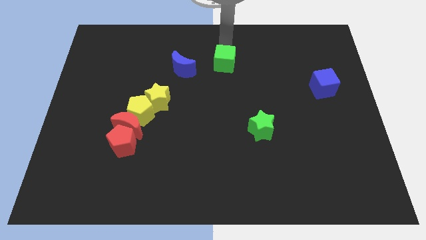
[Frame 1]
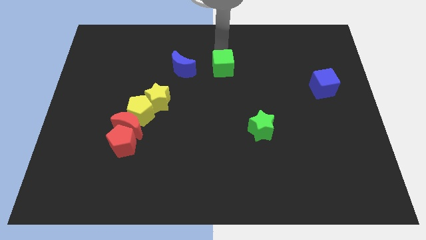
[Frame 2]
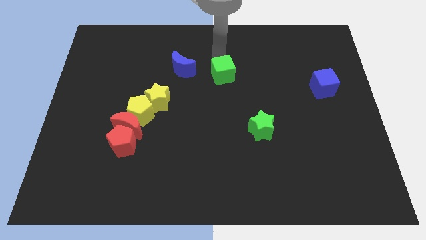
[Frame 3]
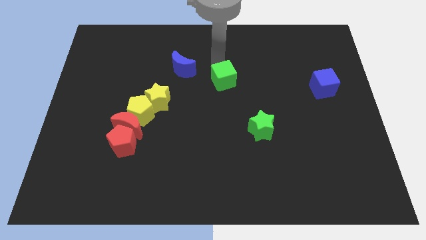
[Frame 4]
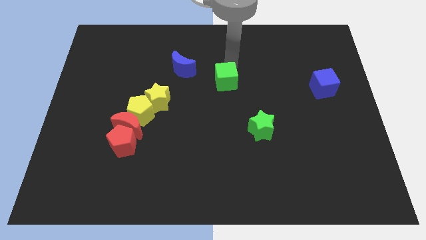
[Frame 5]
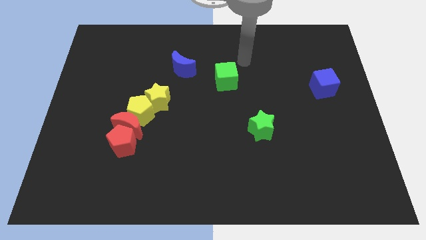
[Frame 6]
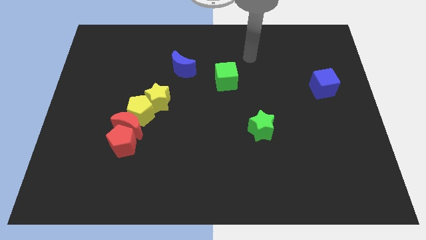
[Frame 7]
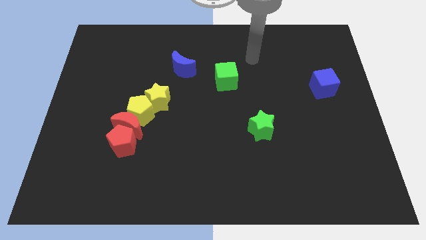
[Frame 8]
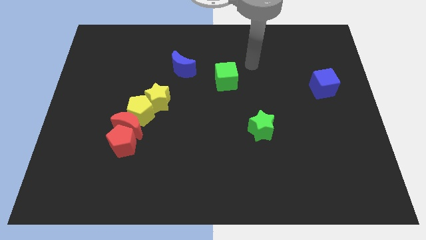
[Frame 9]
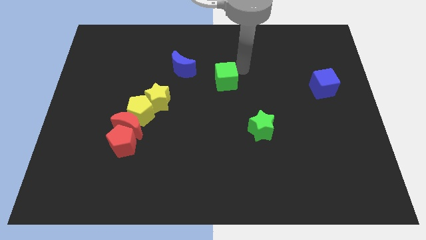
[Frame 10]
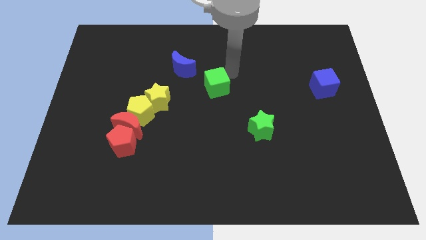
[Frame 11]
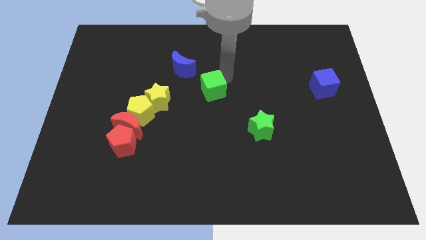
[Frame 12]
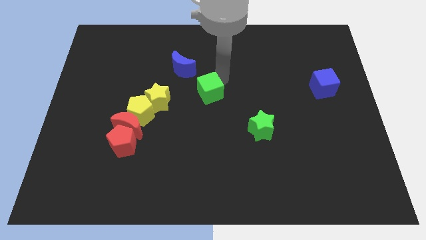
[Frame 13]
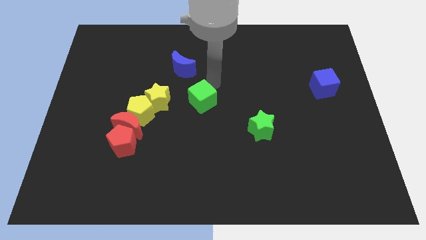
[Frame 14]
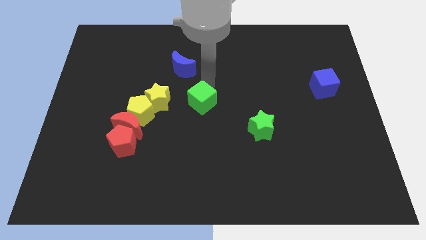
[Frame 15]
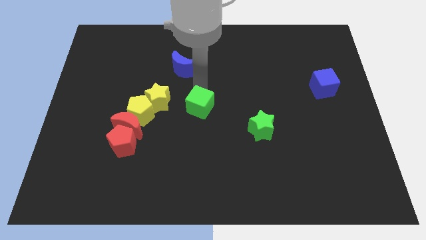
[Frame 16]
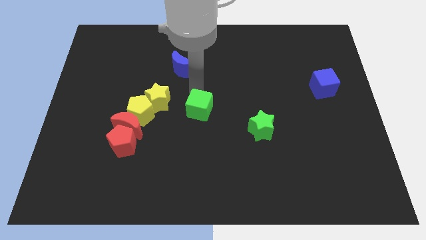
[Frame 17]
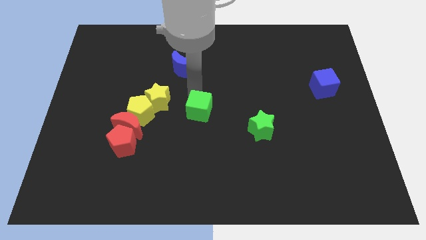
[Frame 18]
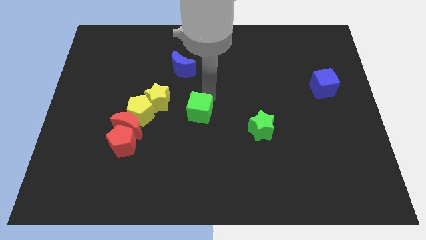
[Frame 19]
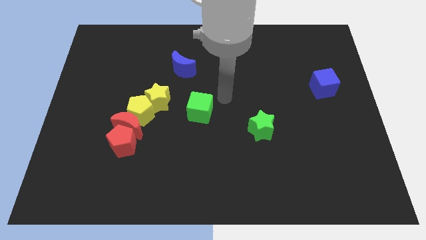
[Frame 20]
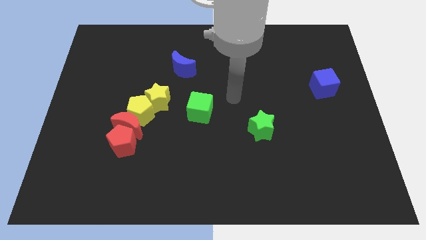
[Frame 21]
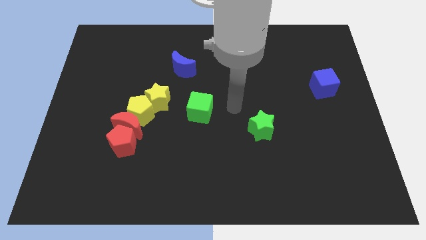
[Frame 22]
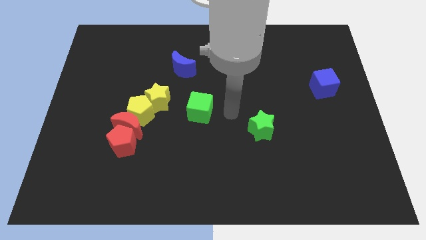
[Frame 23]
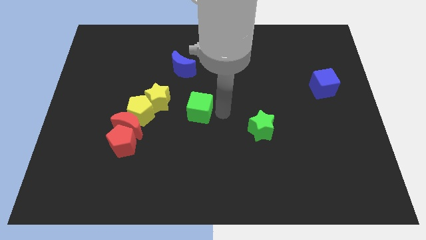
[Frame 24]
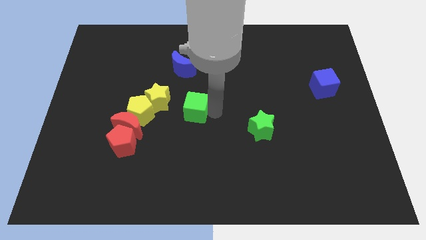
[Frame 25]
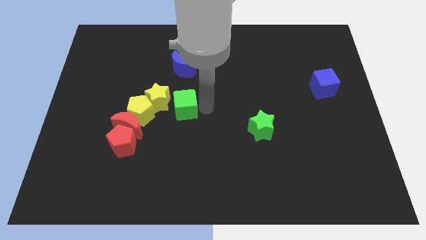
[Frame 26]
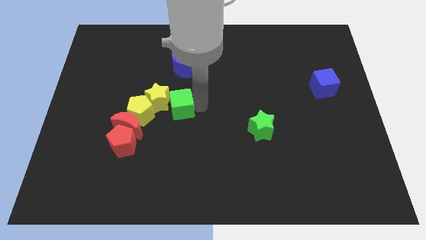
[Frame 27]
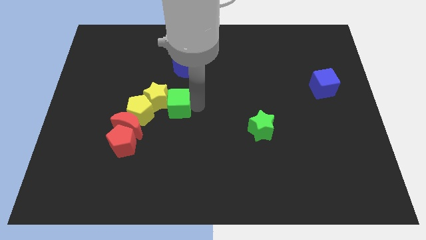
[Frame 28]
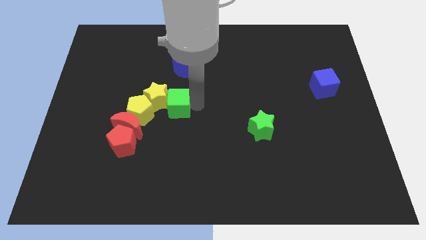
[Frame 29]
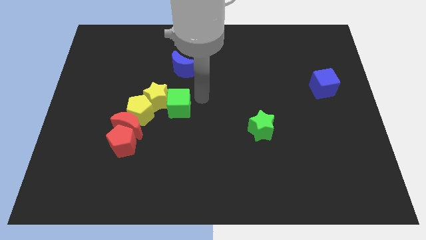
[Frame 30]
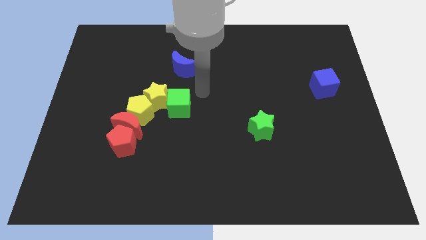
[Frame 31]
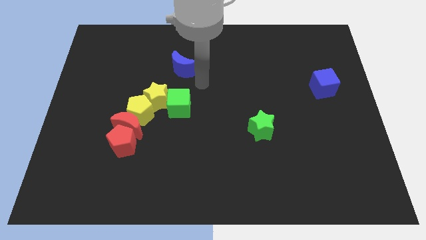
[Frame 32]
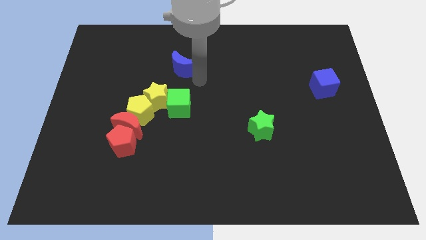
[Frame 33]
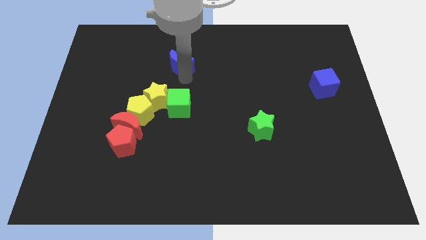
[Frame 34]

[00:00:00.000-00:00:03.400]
put the green cube at the bottom of the blue moon

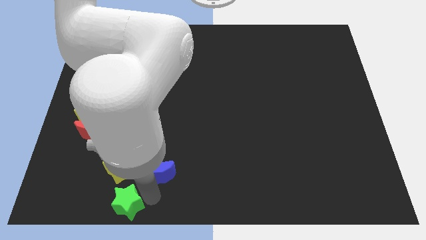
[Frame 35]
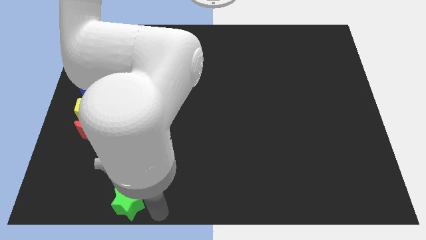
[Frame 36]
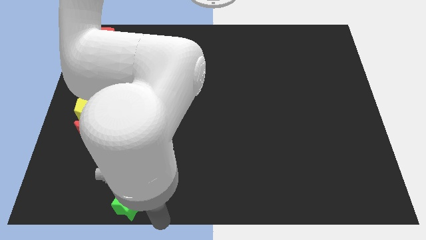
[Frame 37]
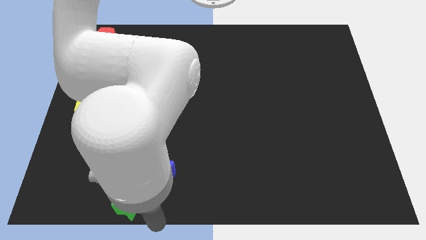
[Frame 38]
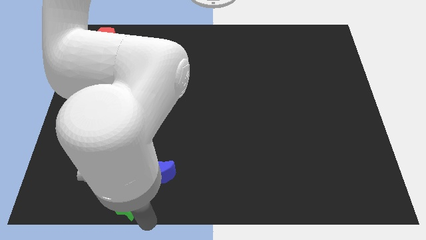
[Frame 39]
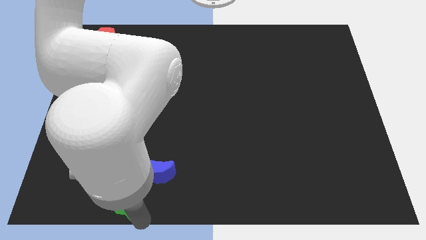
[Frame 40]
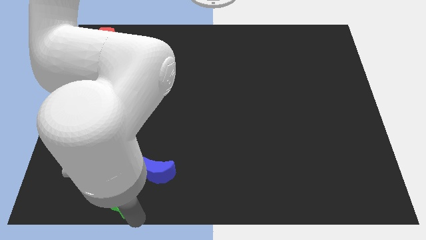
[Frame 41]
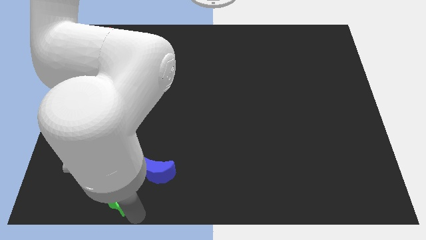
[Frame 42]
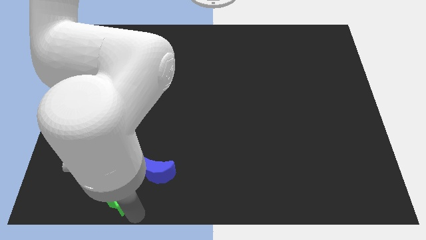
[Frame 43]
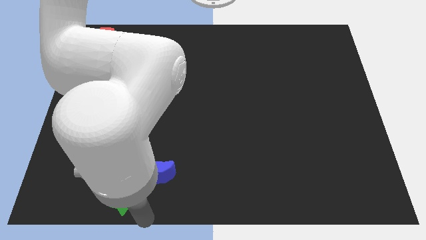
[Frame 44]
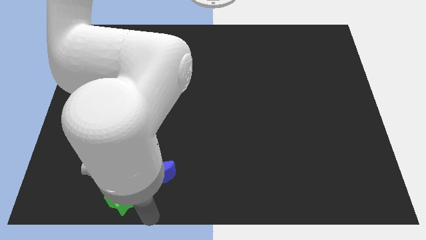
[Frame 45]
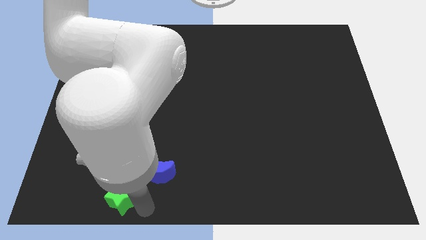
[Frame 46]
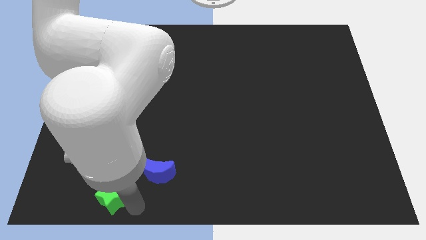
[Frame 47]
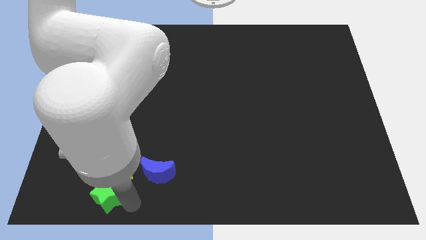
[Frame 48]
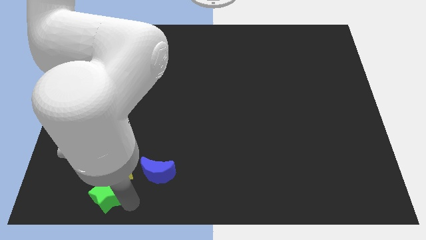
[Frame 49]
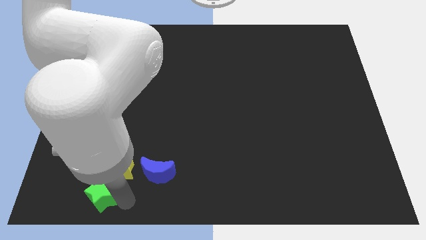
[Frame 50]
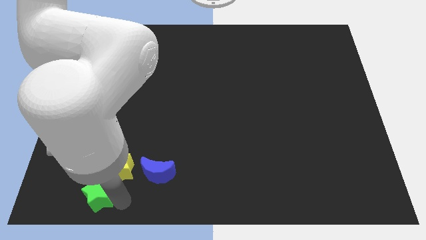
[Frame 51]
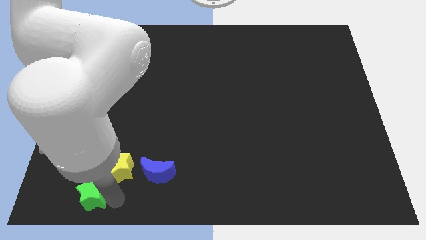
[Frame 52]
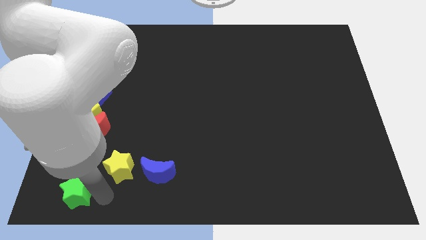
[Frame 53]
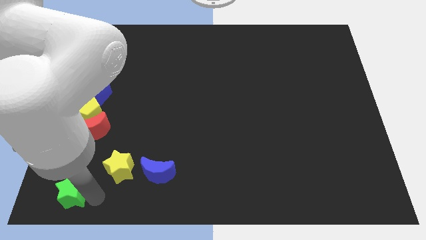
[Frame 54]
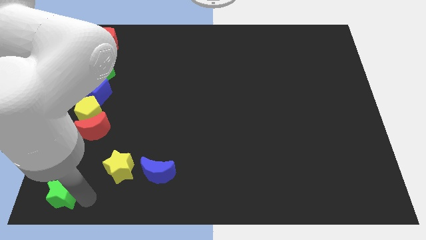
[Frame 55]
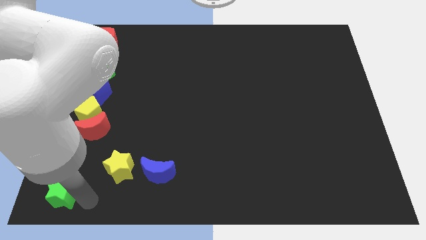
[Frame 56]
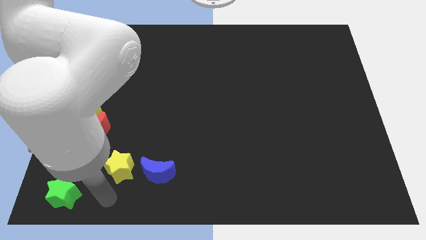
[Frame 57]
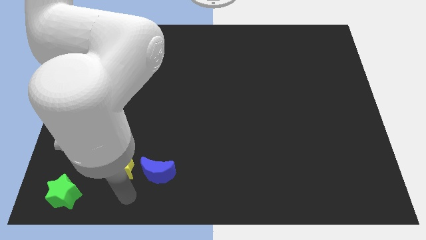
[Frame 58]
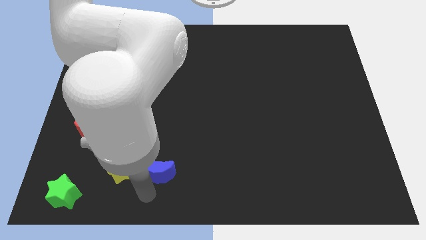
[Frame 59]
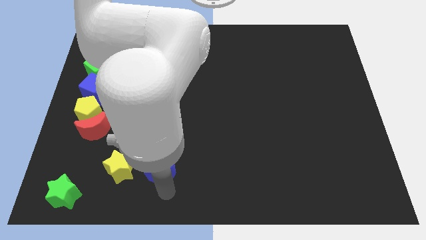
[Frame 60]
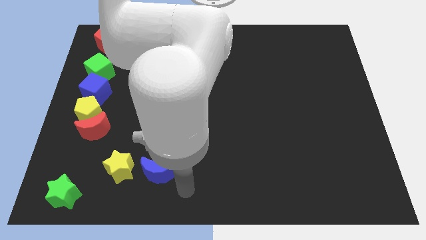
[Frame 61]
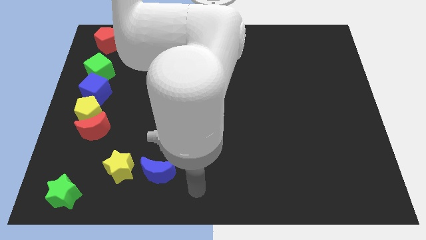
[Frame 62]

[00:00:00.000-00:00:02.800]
push the green star vertically below the red crescent

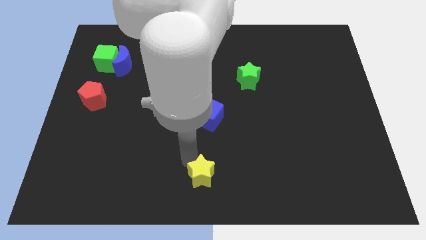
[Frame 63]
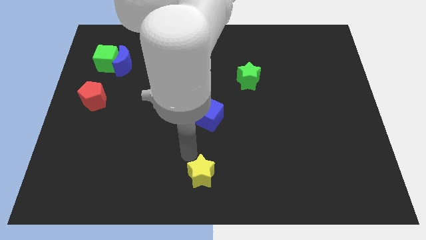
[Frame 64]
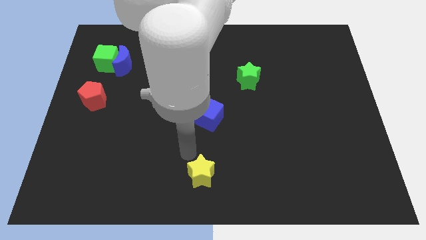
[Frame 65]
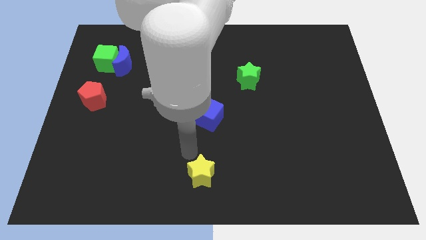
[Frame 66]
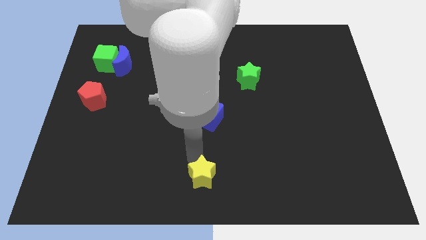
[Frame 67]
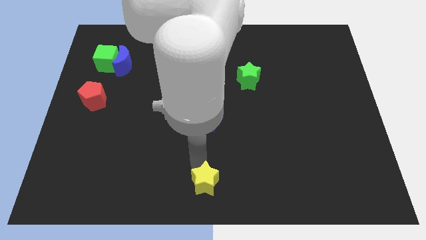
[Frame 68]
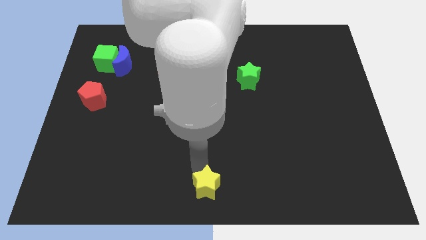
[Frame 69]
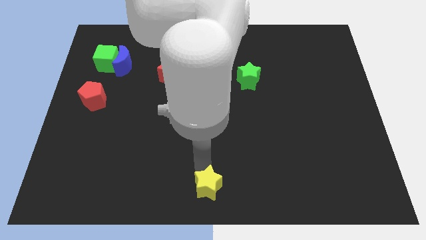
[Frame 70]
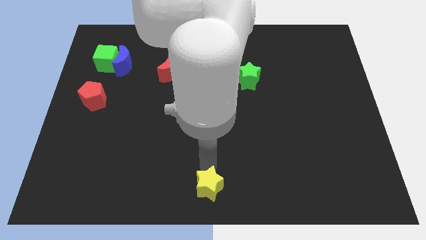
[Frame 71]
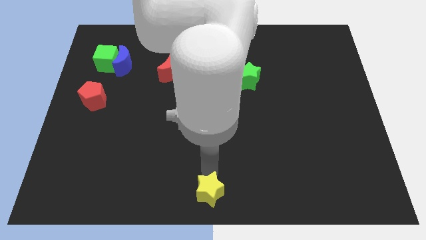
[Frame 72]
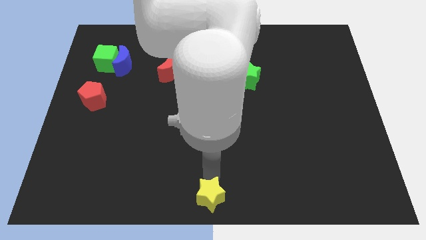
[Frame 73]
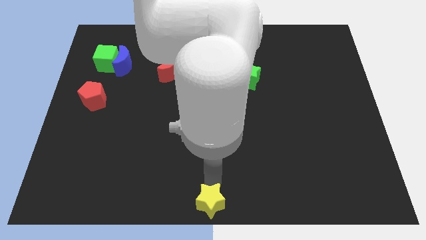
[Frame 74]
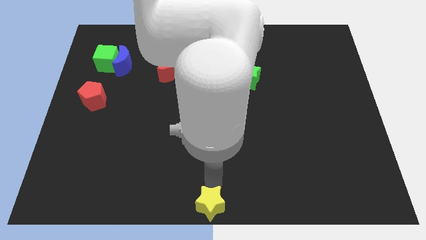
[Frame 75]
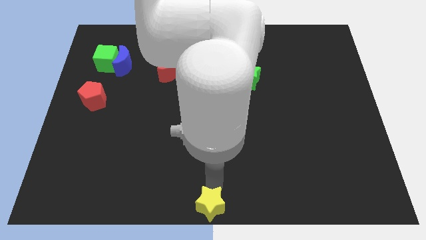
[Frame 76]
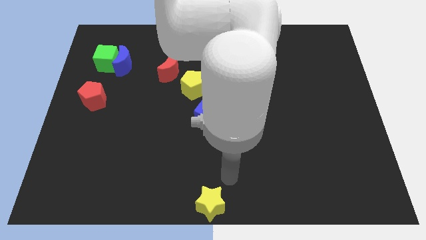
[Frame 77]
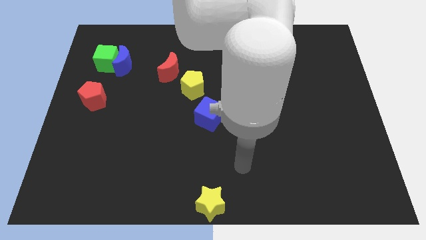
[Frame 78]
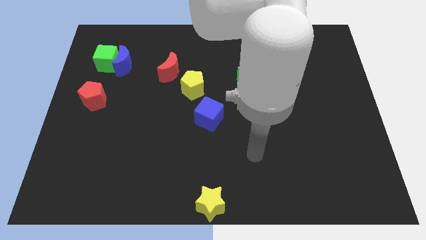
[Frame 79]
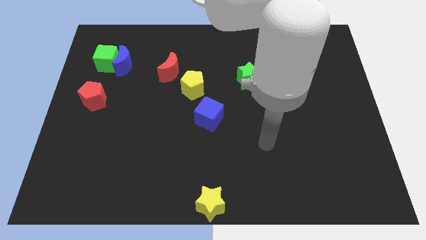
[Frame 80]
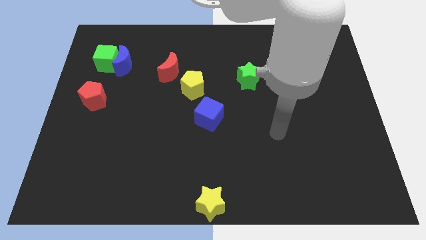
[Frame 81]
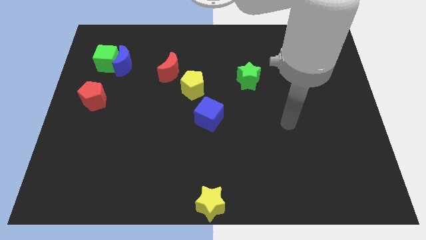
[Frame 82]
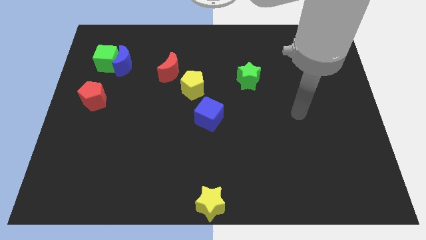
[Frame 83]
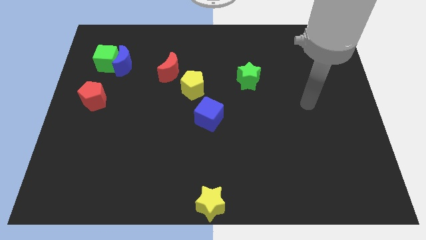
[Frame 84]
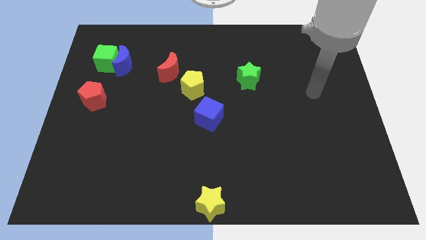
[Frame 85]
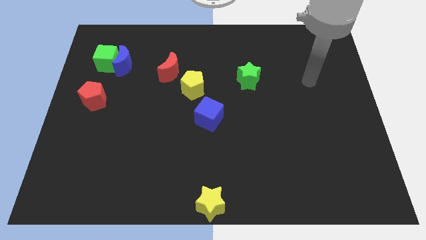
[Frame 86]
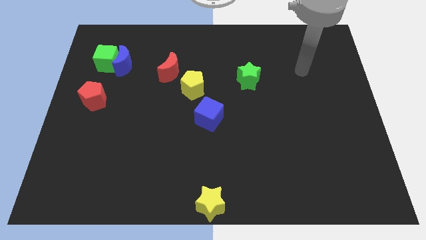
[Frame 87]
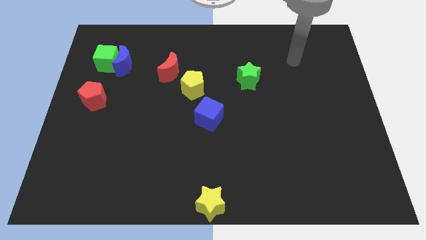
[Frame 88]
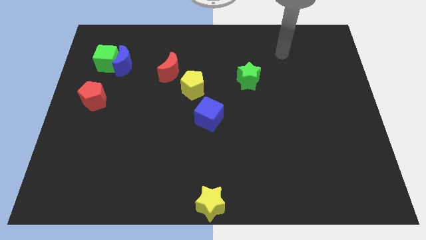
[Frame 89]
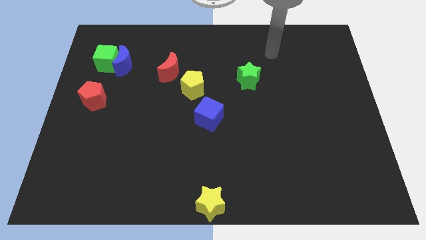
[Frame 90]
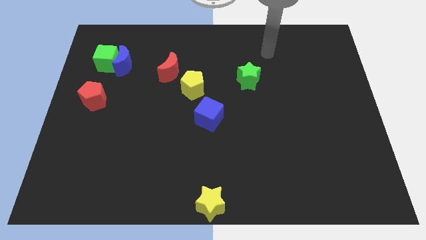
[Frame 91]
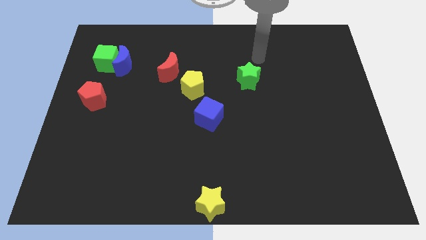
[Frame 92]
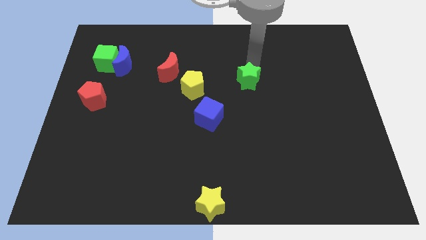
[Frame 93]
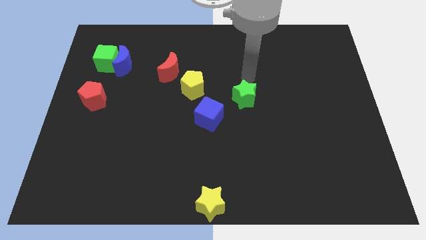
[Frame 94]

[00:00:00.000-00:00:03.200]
push the yellow star to the bottom center of the board
